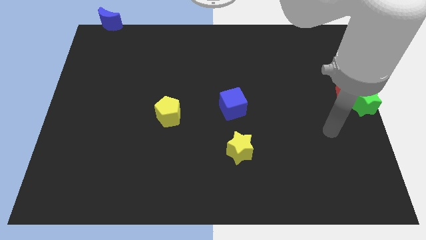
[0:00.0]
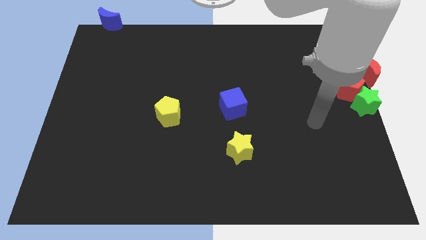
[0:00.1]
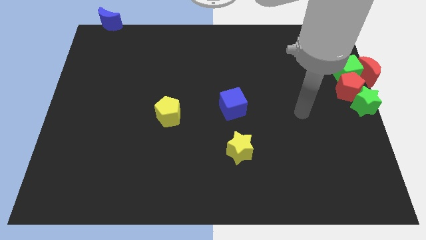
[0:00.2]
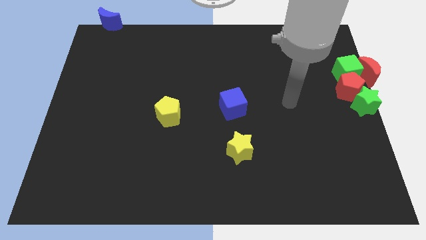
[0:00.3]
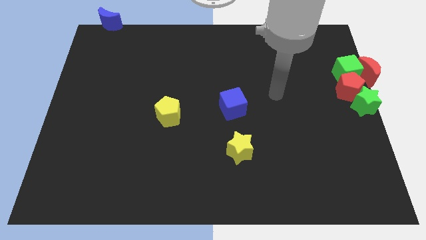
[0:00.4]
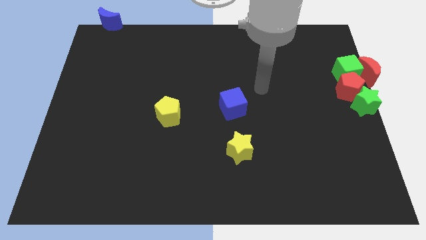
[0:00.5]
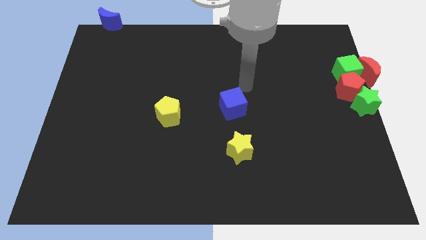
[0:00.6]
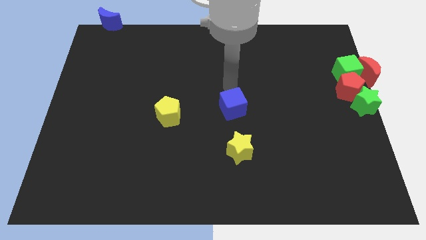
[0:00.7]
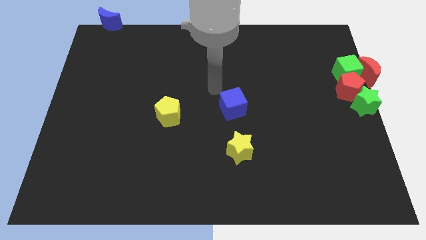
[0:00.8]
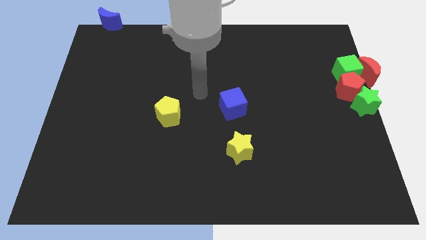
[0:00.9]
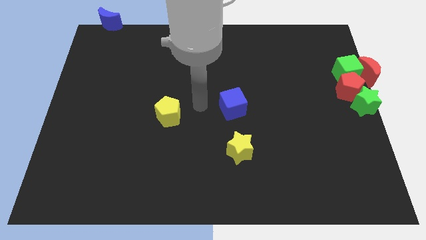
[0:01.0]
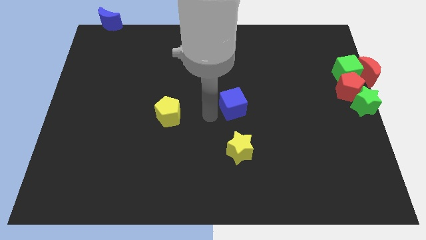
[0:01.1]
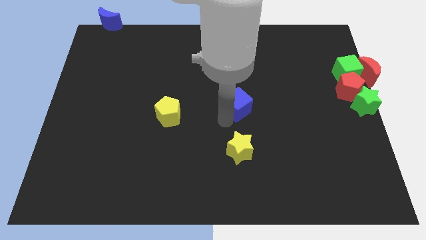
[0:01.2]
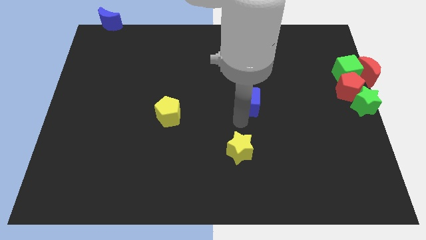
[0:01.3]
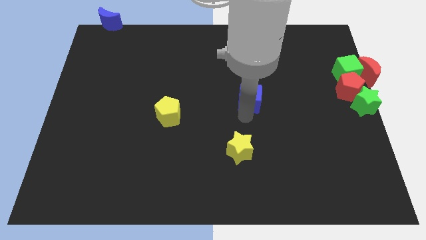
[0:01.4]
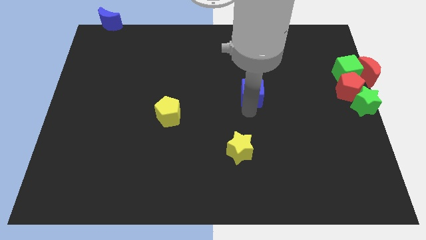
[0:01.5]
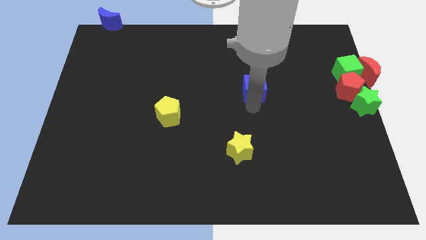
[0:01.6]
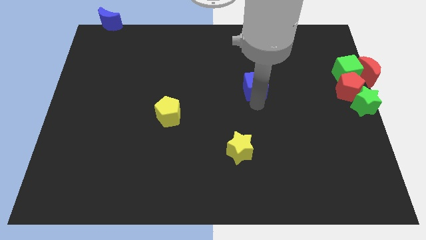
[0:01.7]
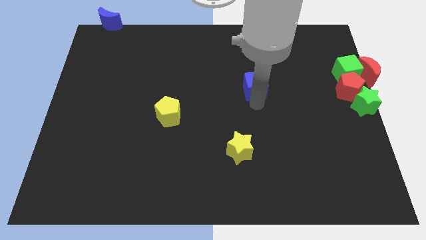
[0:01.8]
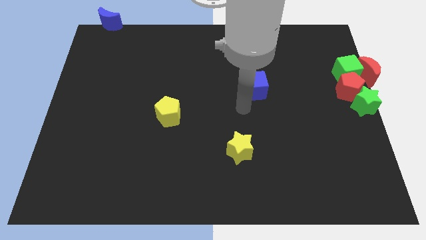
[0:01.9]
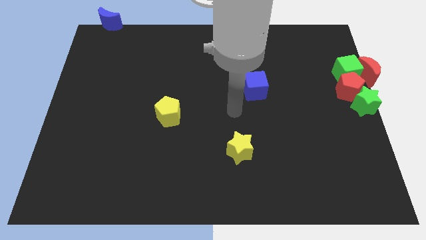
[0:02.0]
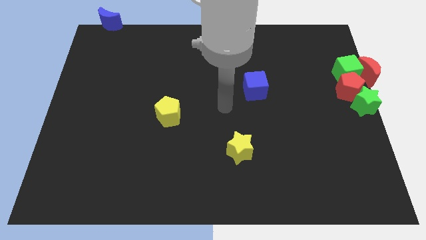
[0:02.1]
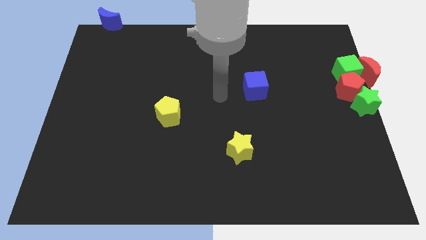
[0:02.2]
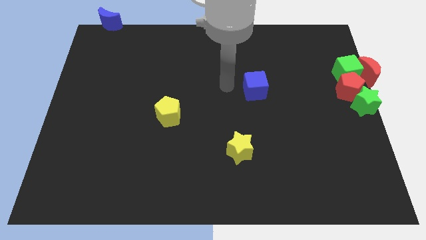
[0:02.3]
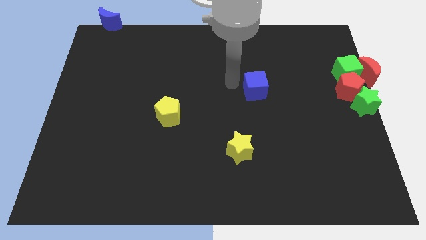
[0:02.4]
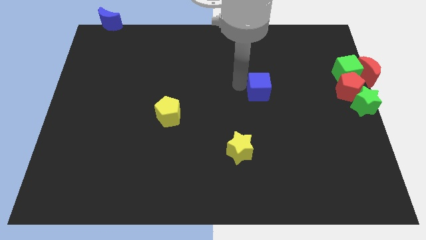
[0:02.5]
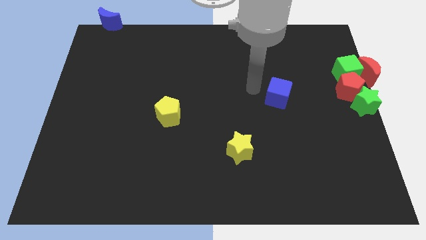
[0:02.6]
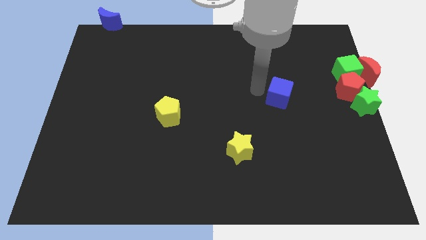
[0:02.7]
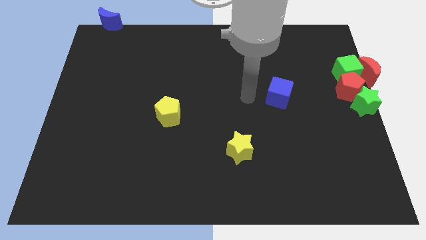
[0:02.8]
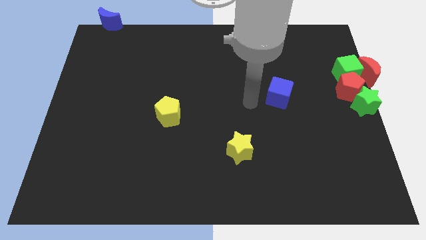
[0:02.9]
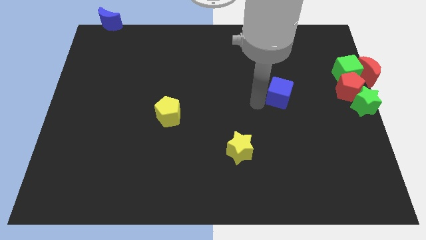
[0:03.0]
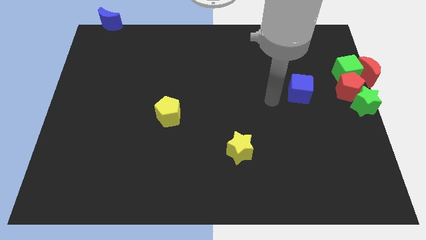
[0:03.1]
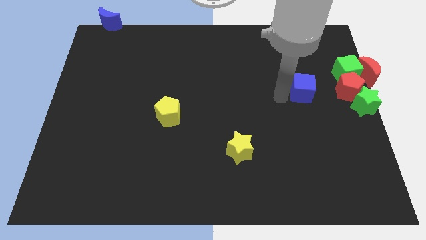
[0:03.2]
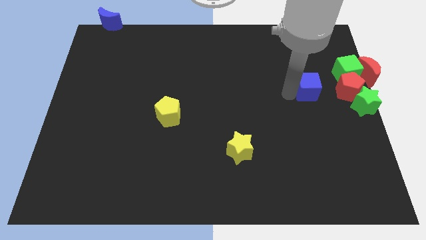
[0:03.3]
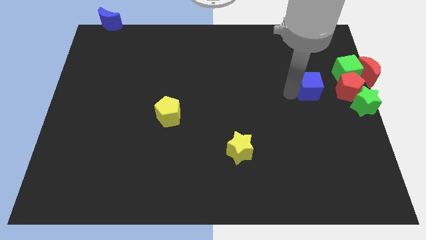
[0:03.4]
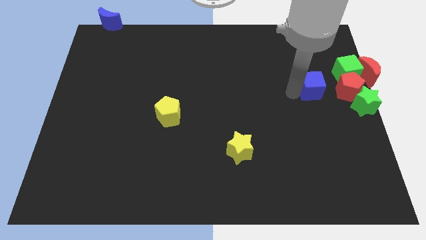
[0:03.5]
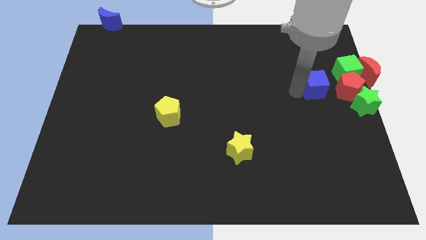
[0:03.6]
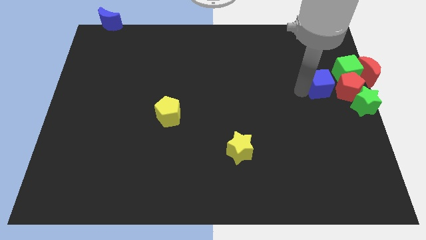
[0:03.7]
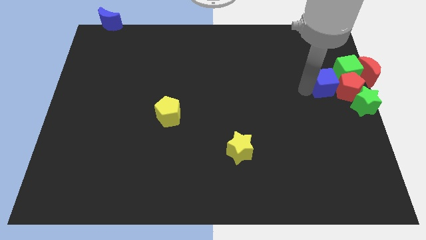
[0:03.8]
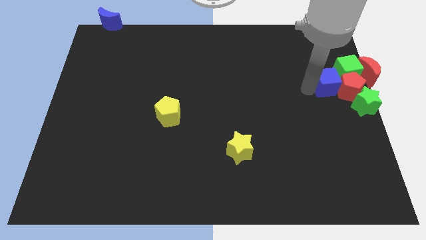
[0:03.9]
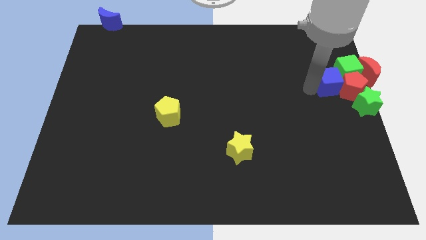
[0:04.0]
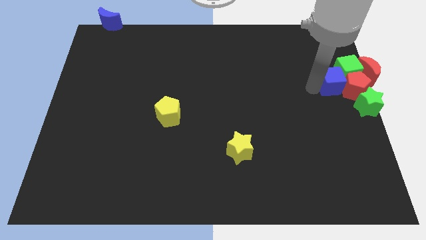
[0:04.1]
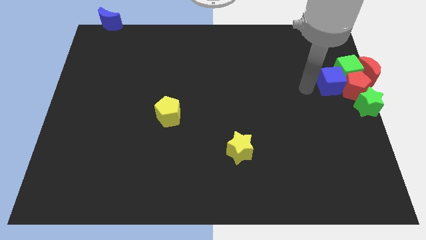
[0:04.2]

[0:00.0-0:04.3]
slide the blue cube from center to center right side of the board

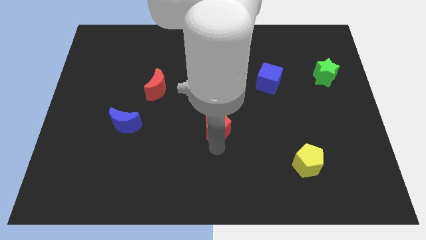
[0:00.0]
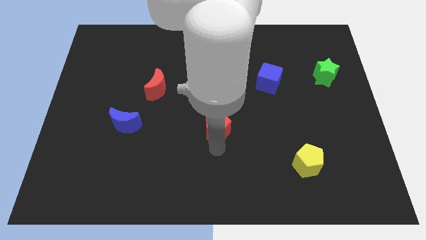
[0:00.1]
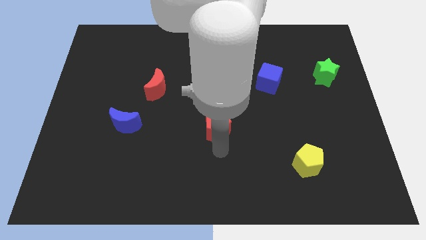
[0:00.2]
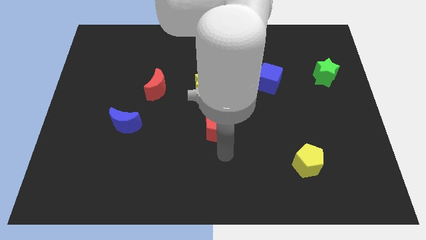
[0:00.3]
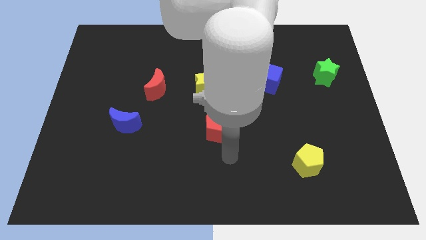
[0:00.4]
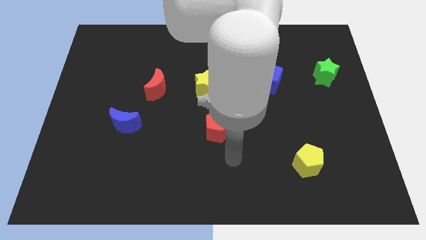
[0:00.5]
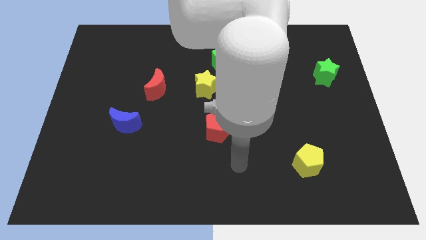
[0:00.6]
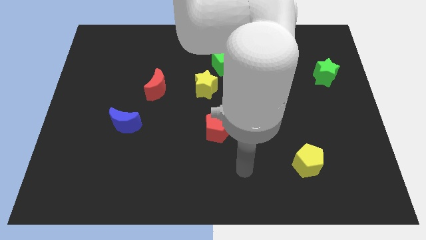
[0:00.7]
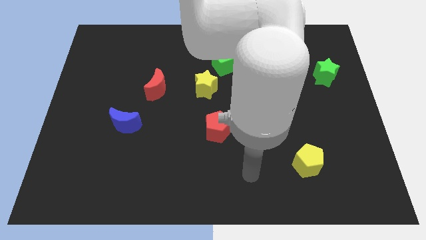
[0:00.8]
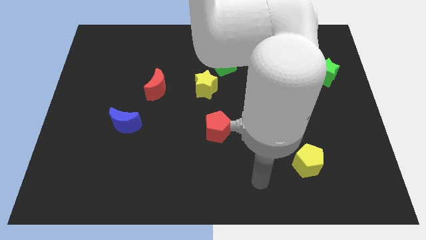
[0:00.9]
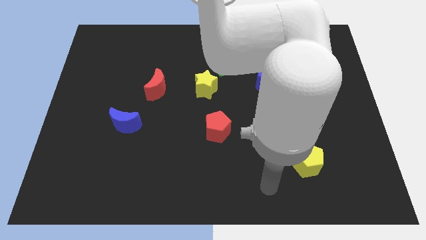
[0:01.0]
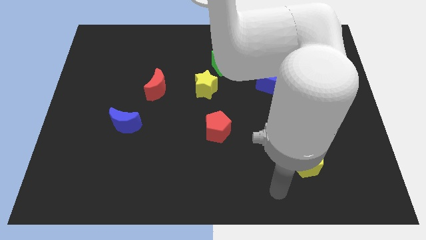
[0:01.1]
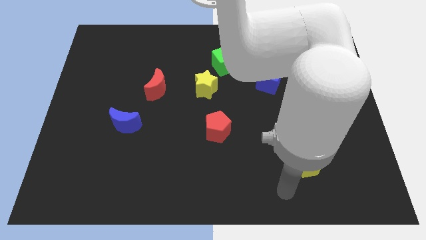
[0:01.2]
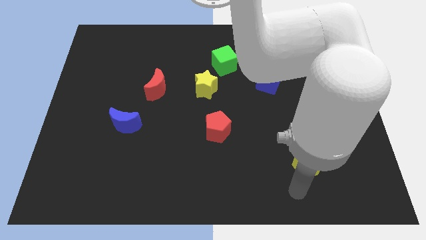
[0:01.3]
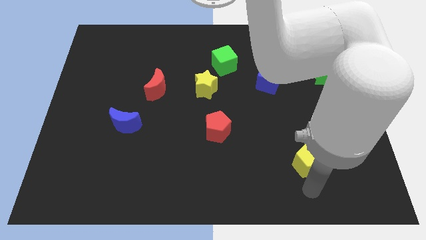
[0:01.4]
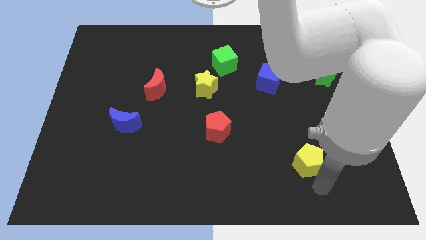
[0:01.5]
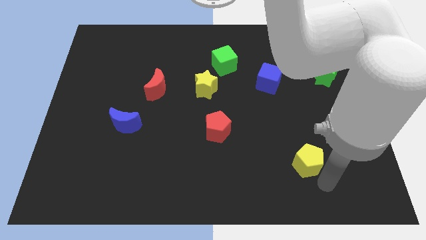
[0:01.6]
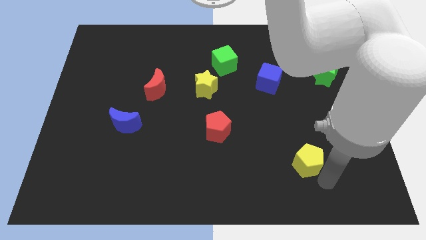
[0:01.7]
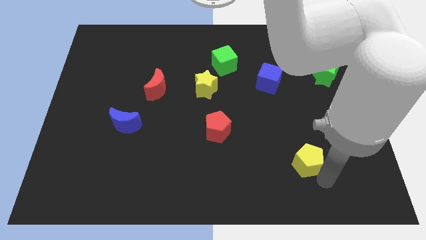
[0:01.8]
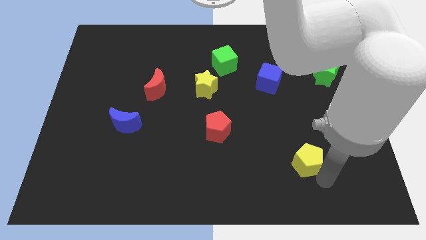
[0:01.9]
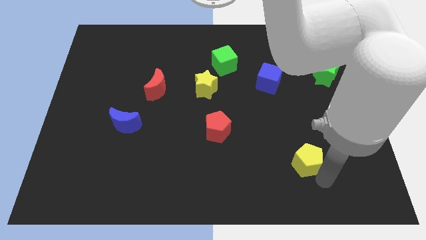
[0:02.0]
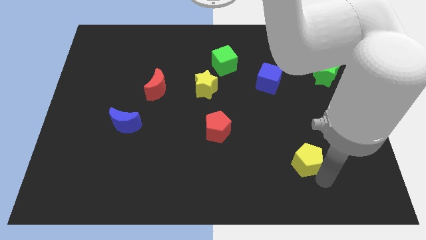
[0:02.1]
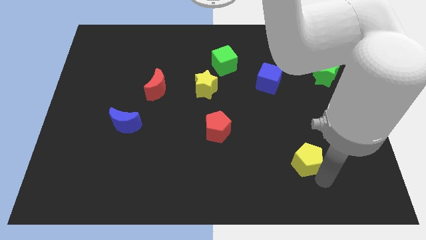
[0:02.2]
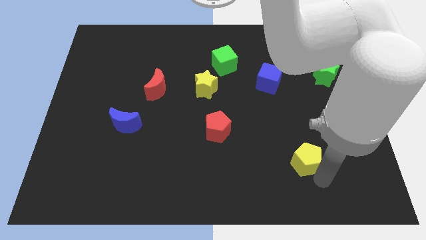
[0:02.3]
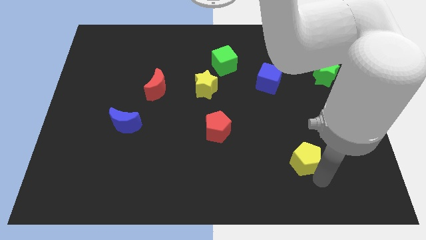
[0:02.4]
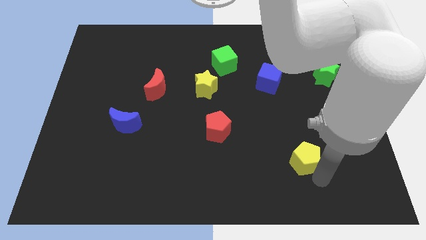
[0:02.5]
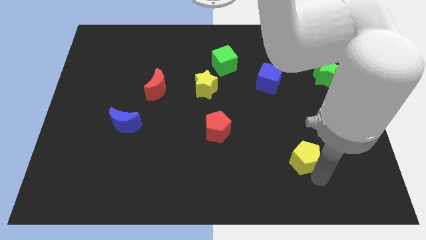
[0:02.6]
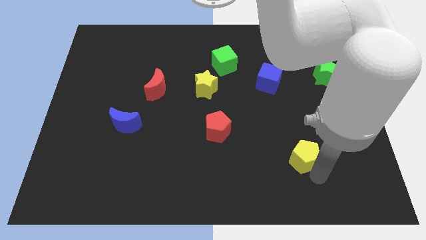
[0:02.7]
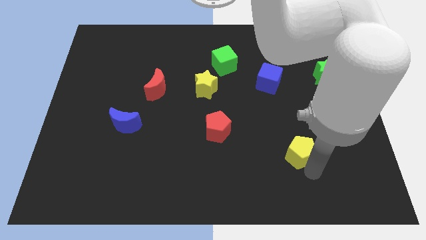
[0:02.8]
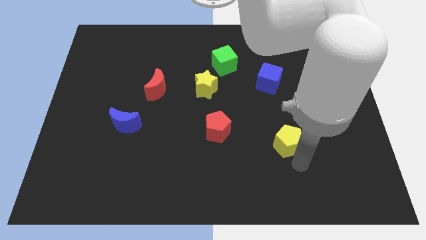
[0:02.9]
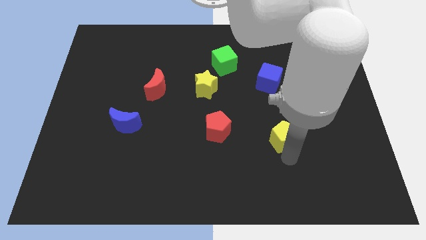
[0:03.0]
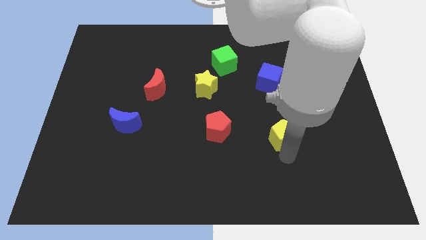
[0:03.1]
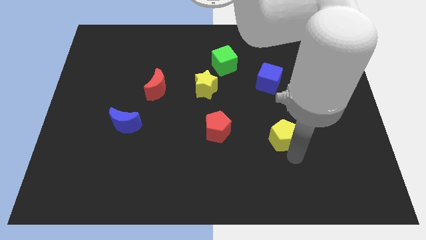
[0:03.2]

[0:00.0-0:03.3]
move yellow pentagon slightly to top

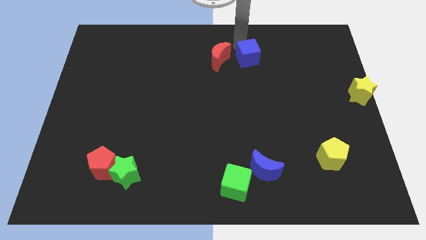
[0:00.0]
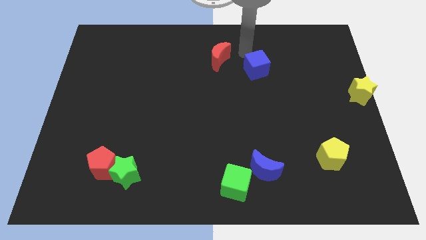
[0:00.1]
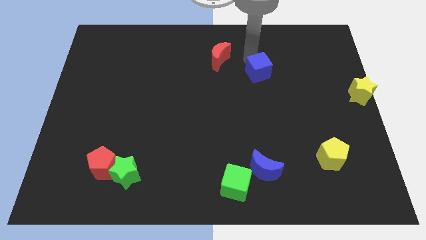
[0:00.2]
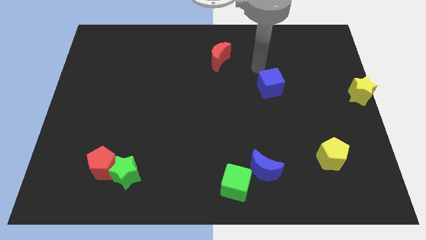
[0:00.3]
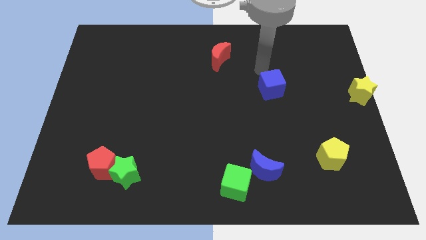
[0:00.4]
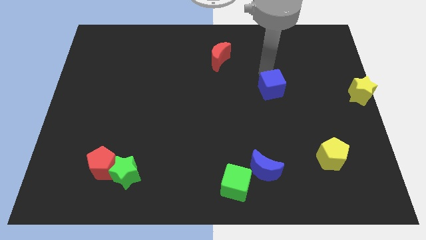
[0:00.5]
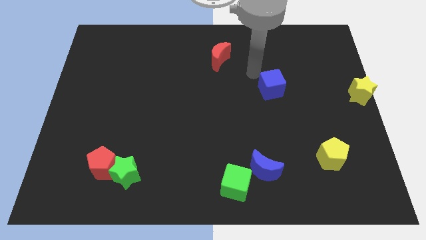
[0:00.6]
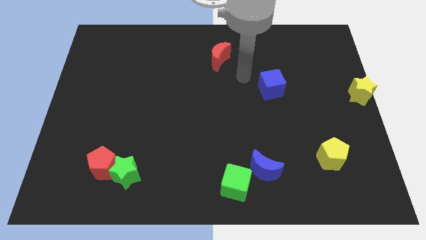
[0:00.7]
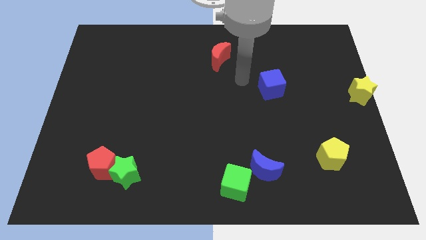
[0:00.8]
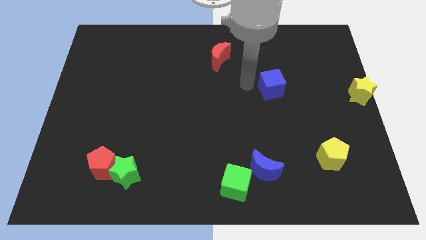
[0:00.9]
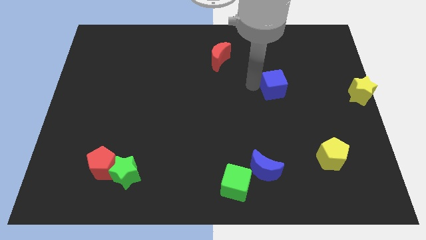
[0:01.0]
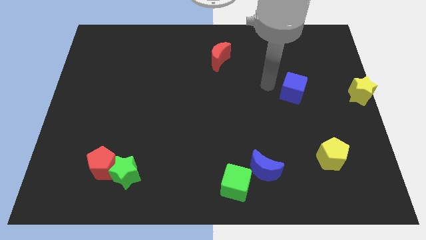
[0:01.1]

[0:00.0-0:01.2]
move the blue cube towards the left to the yellow star
